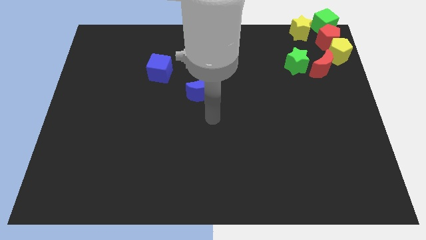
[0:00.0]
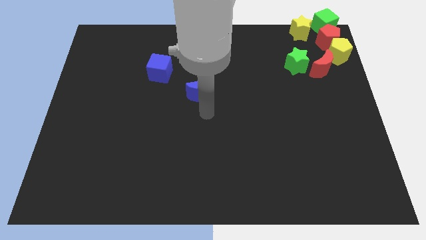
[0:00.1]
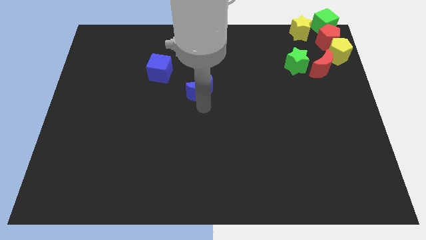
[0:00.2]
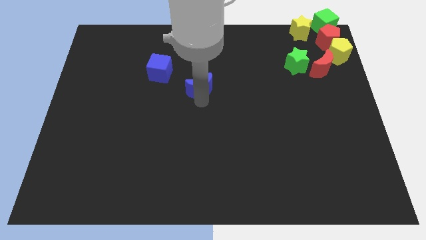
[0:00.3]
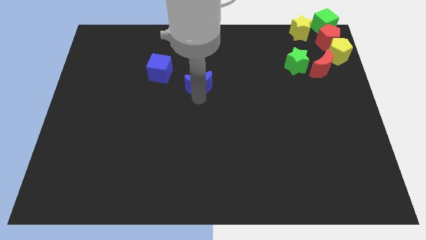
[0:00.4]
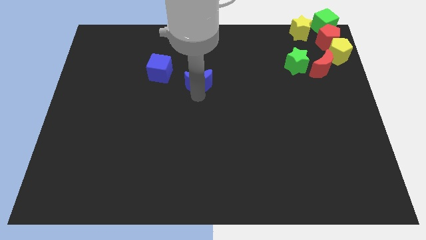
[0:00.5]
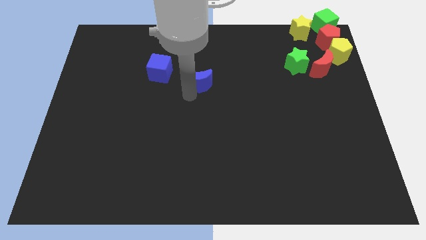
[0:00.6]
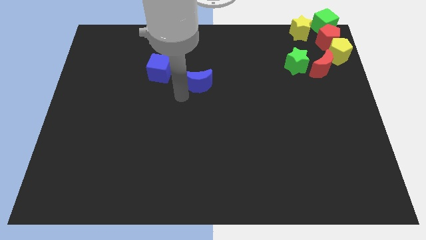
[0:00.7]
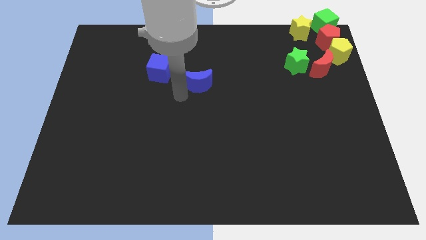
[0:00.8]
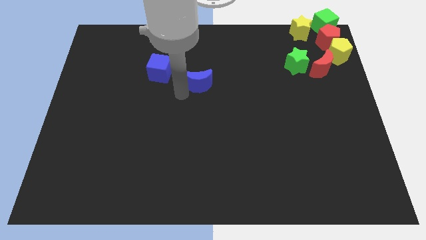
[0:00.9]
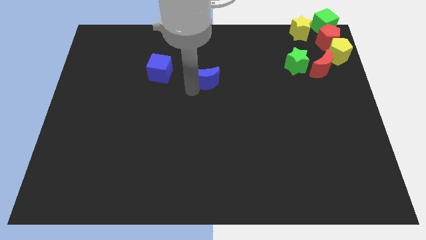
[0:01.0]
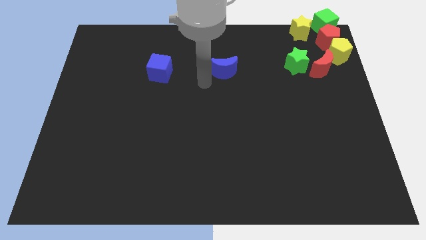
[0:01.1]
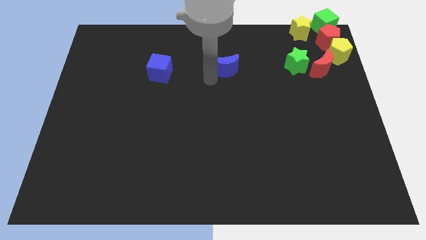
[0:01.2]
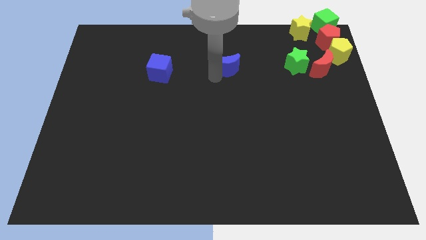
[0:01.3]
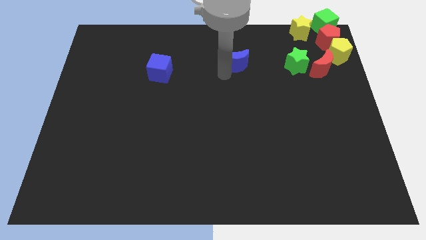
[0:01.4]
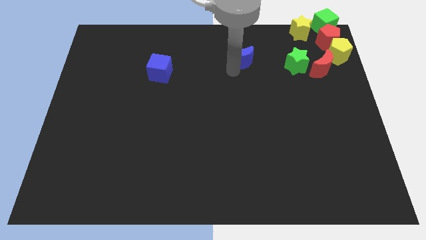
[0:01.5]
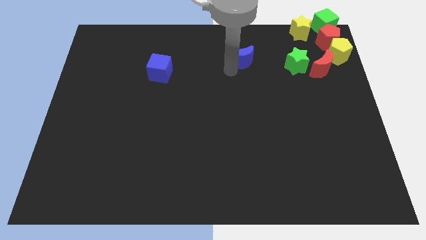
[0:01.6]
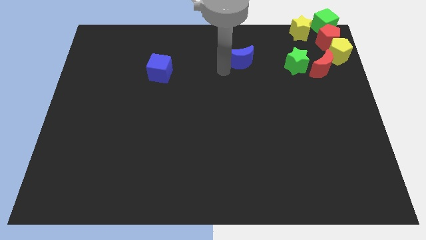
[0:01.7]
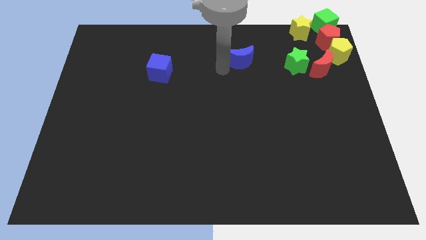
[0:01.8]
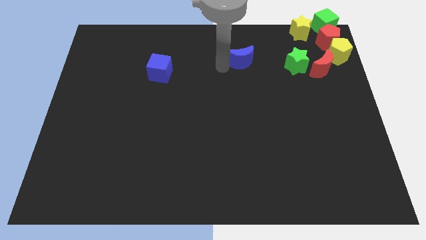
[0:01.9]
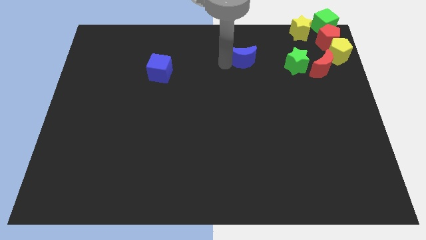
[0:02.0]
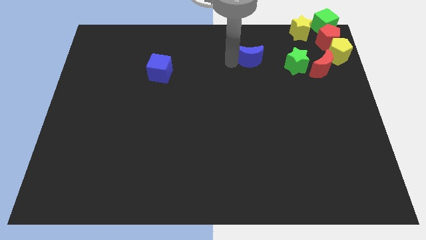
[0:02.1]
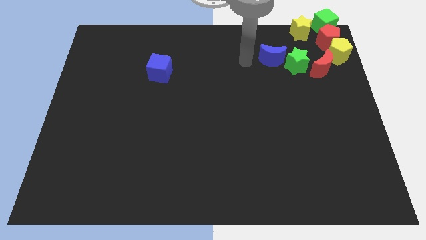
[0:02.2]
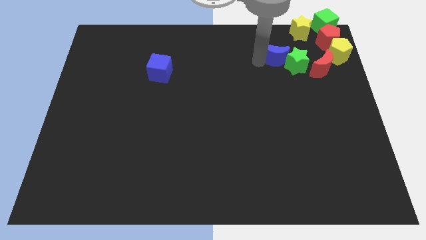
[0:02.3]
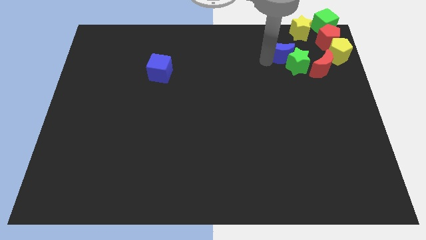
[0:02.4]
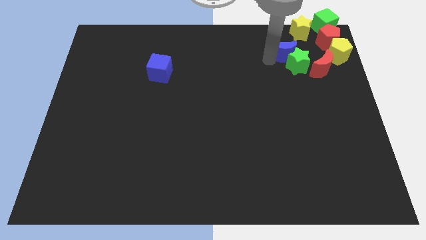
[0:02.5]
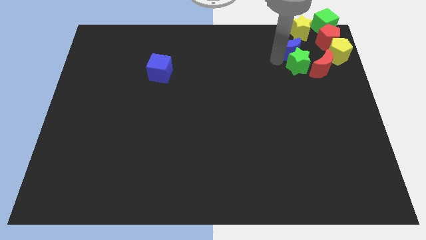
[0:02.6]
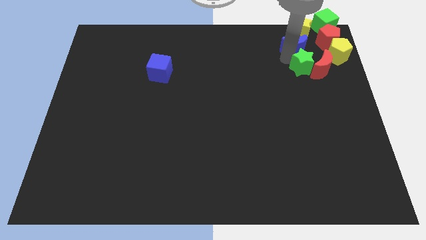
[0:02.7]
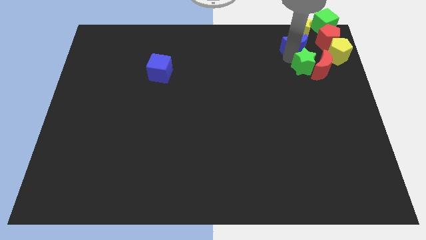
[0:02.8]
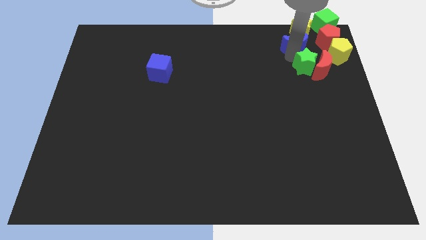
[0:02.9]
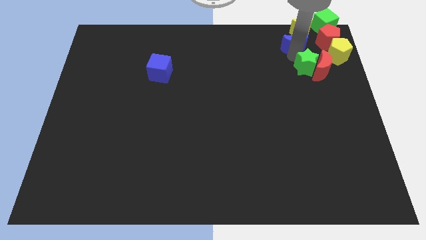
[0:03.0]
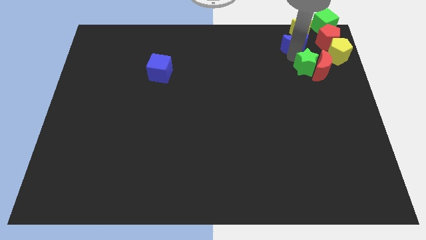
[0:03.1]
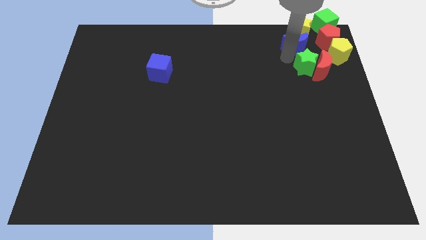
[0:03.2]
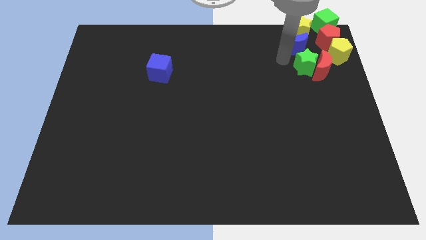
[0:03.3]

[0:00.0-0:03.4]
place blue crescent below yellow star

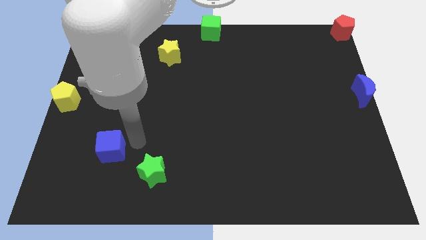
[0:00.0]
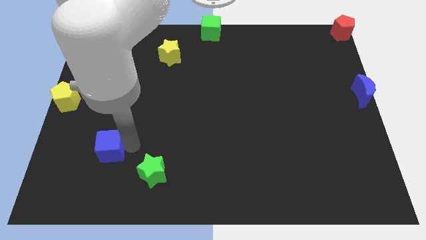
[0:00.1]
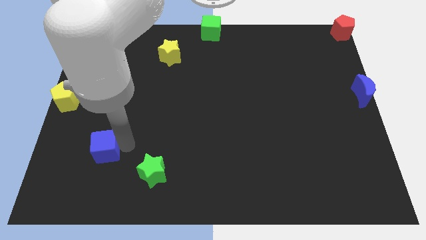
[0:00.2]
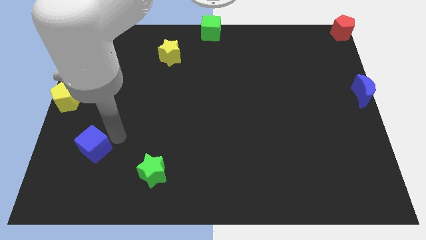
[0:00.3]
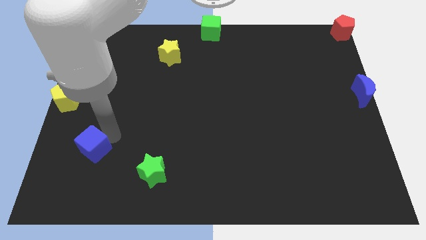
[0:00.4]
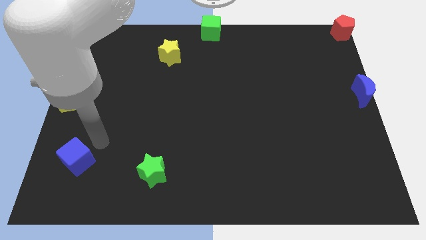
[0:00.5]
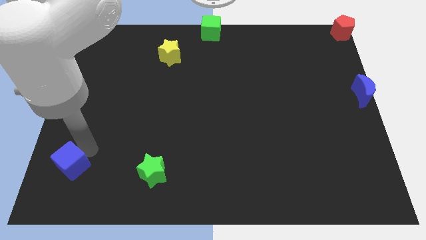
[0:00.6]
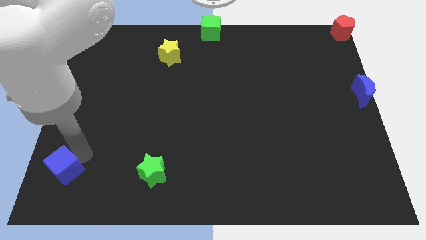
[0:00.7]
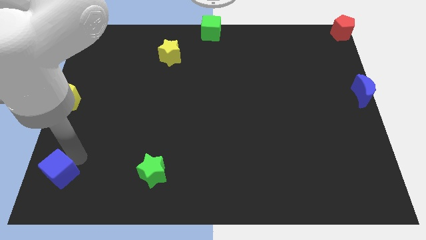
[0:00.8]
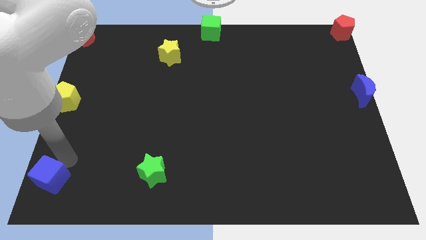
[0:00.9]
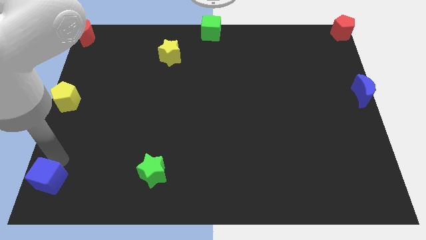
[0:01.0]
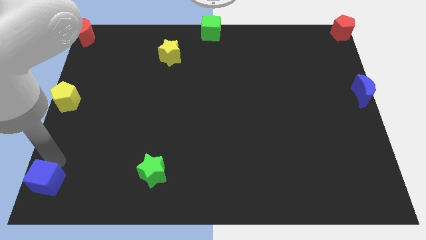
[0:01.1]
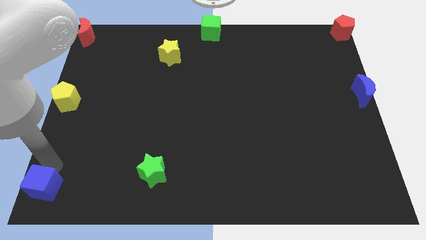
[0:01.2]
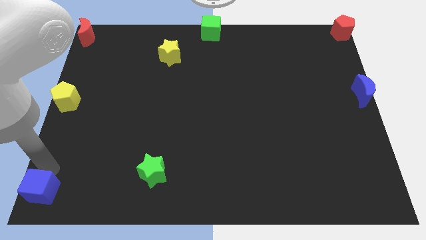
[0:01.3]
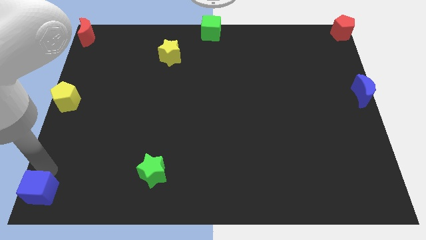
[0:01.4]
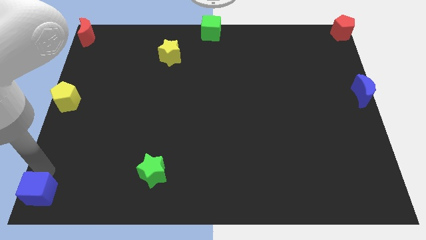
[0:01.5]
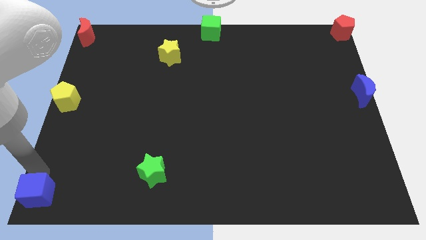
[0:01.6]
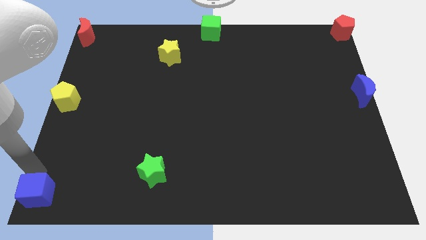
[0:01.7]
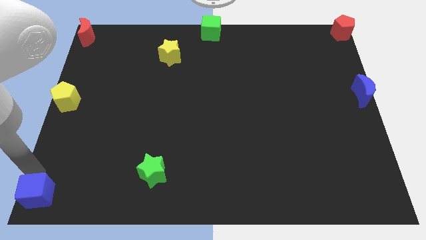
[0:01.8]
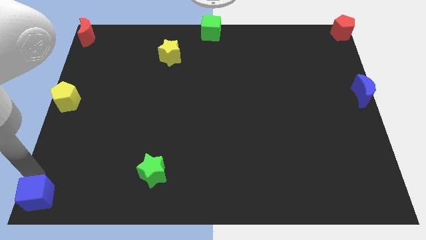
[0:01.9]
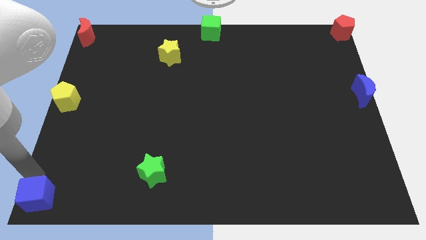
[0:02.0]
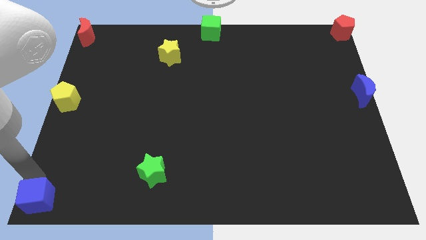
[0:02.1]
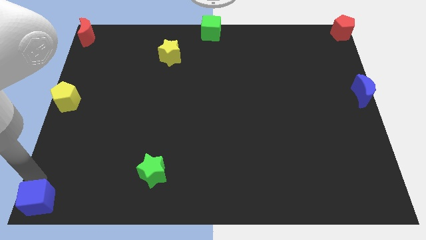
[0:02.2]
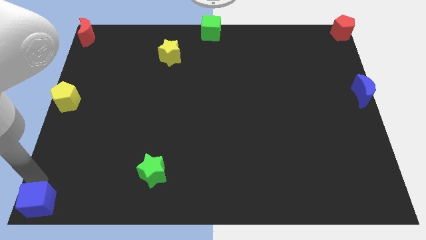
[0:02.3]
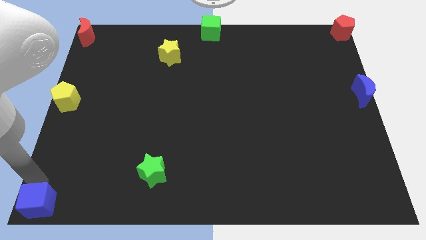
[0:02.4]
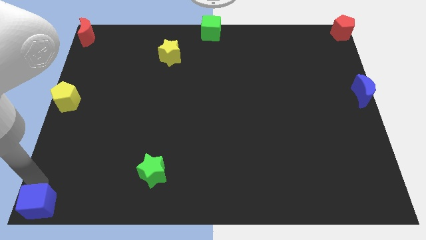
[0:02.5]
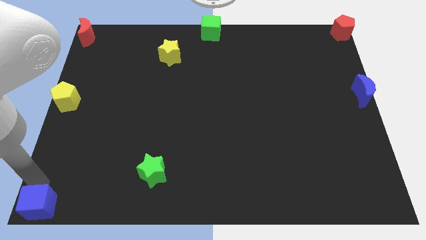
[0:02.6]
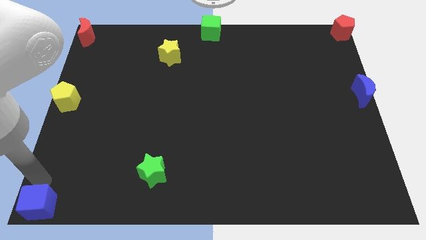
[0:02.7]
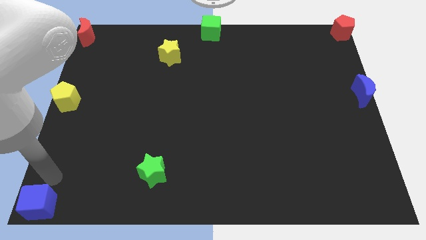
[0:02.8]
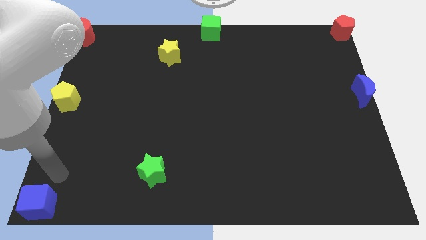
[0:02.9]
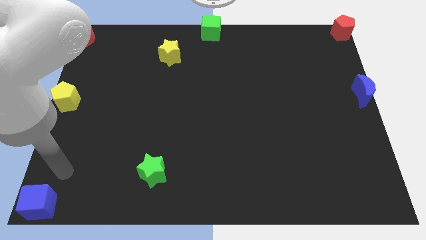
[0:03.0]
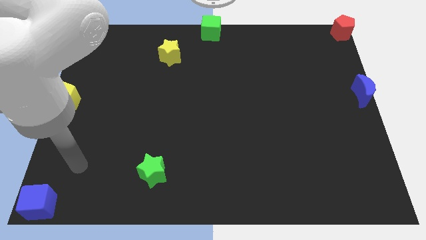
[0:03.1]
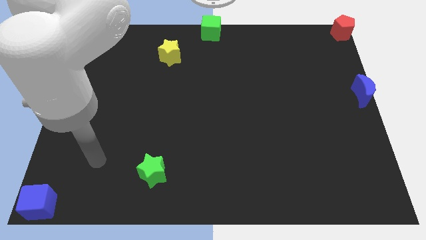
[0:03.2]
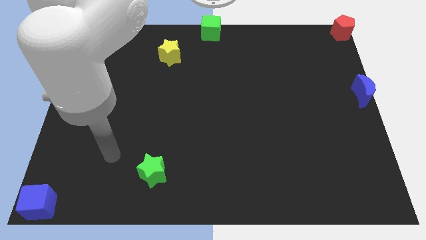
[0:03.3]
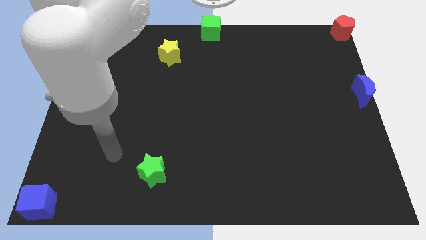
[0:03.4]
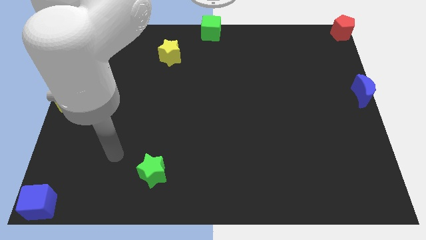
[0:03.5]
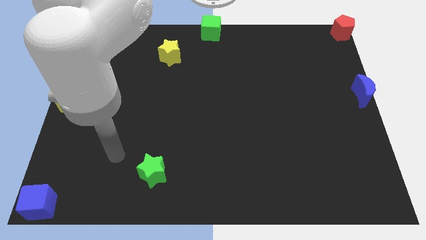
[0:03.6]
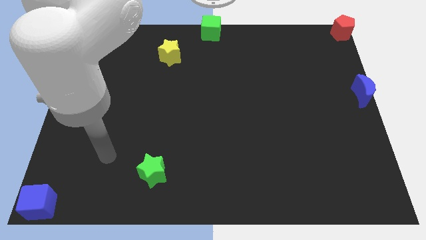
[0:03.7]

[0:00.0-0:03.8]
place the blue cube below the yellow pentagon

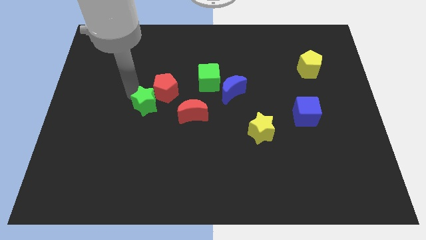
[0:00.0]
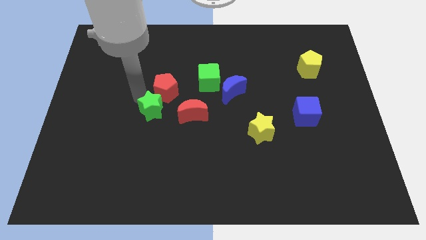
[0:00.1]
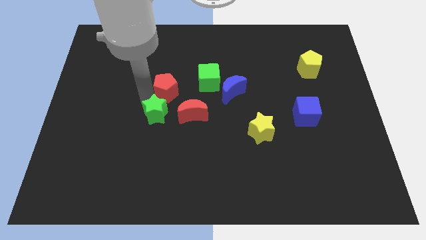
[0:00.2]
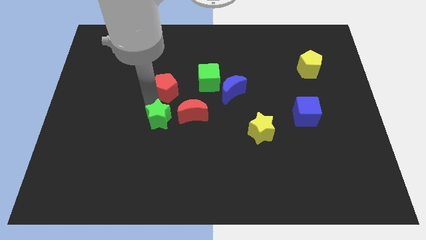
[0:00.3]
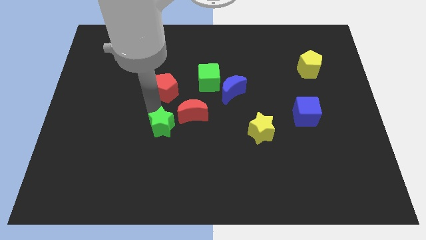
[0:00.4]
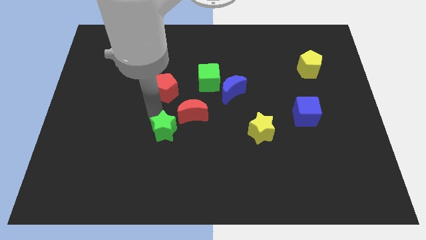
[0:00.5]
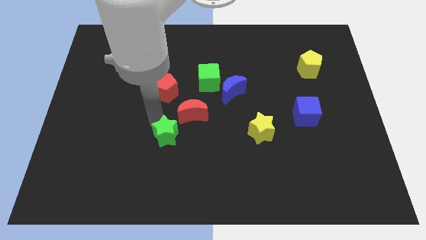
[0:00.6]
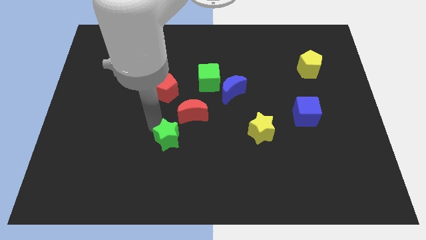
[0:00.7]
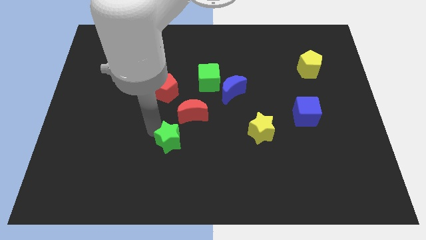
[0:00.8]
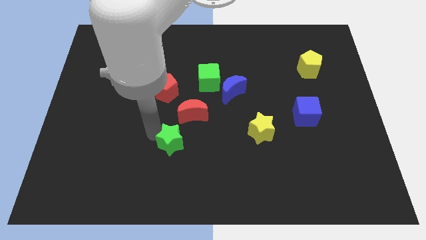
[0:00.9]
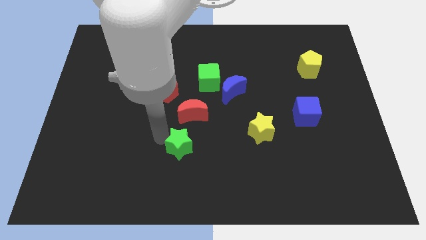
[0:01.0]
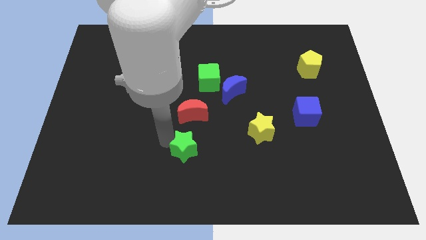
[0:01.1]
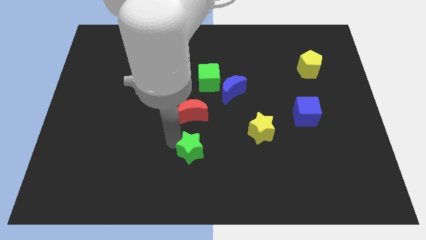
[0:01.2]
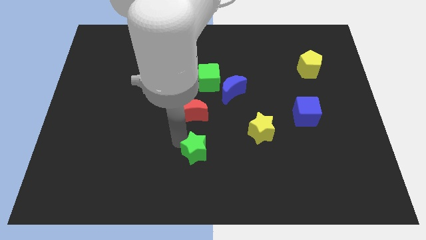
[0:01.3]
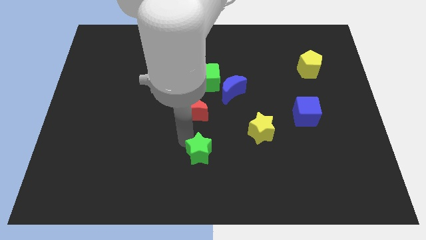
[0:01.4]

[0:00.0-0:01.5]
place the green star below the red crescent

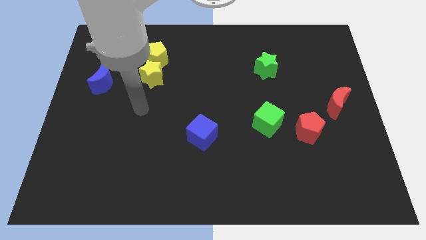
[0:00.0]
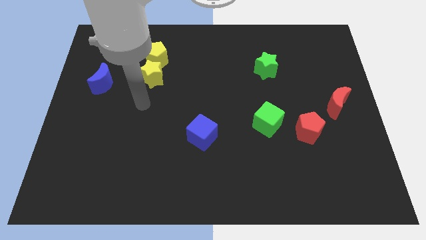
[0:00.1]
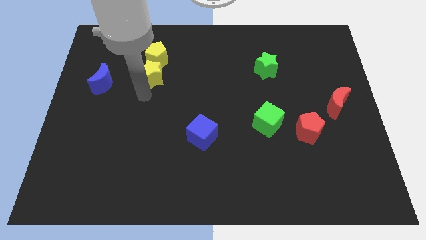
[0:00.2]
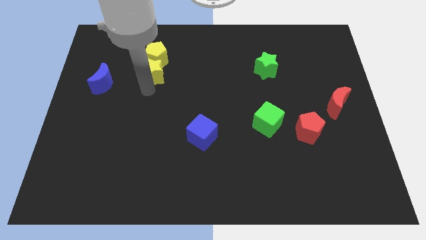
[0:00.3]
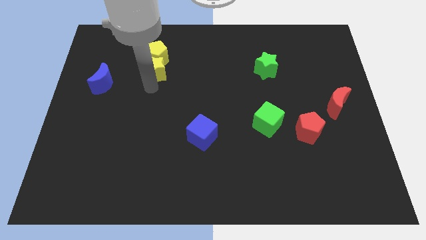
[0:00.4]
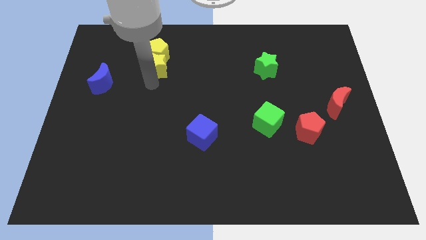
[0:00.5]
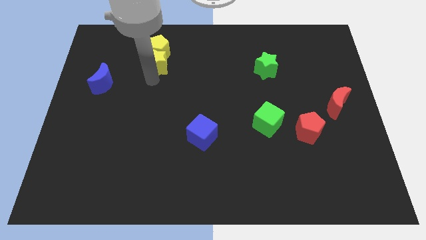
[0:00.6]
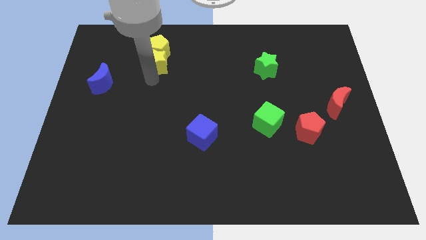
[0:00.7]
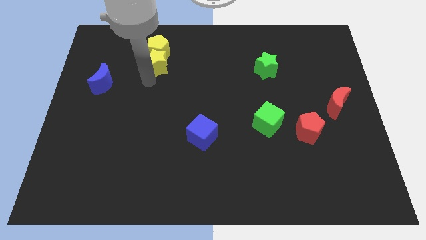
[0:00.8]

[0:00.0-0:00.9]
move the yellow star close to the yellow pentagon
